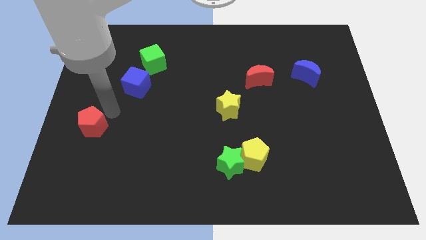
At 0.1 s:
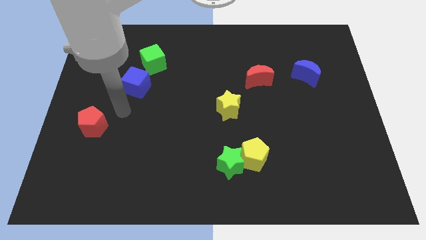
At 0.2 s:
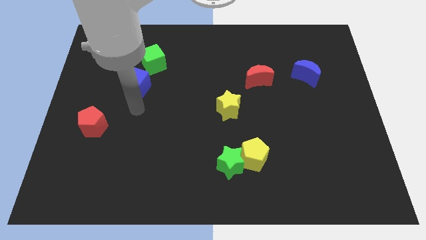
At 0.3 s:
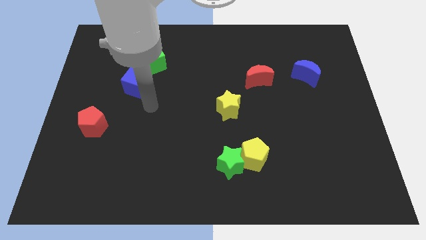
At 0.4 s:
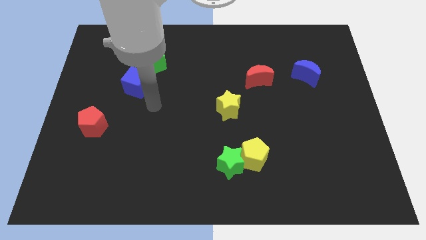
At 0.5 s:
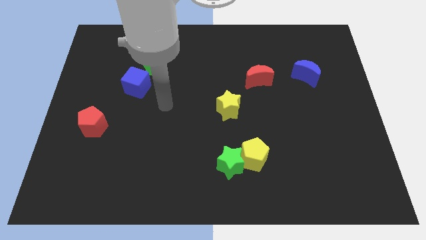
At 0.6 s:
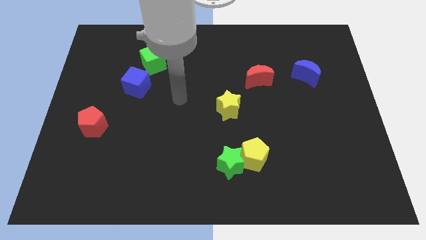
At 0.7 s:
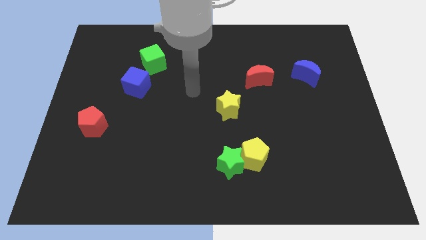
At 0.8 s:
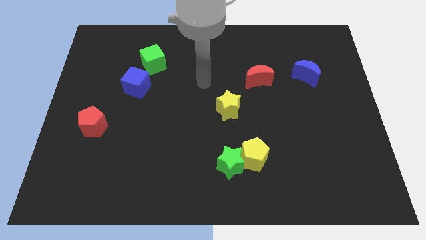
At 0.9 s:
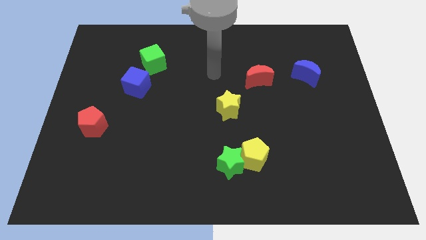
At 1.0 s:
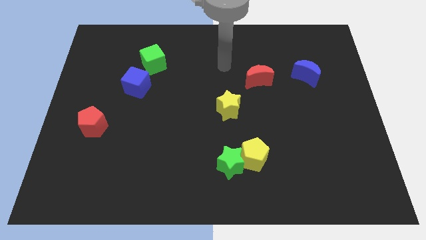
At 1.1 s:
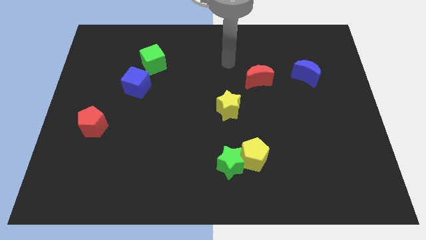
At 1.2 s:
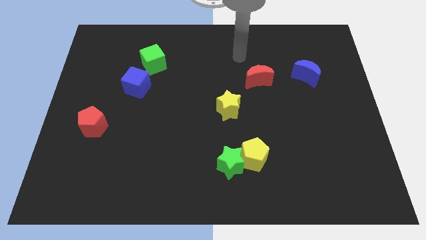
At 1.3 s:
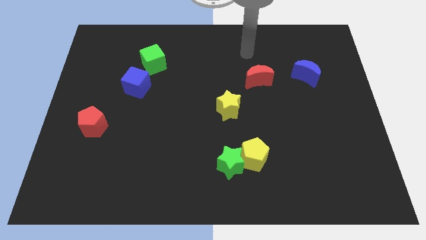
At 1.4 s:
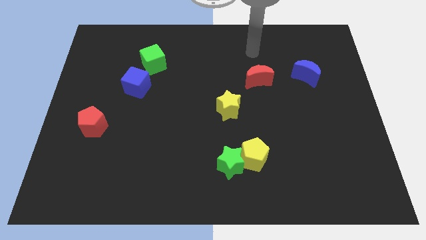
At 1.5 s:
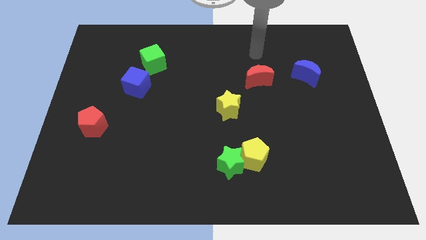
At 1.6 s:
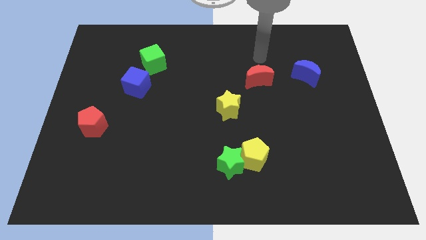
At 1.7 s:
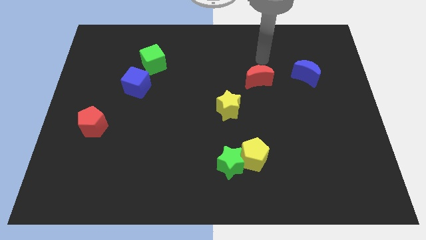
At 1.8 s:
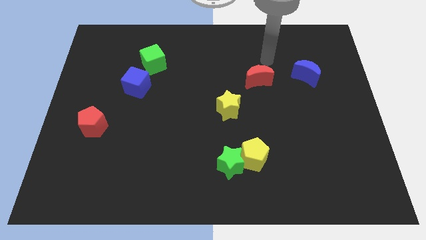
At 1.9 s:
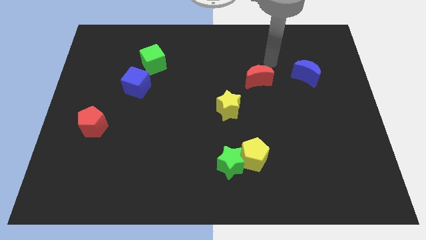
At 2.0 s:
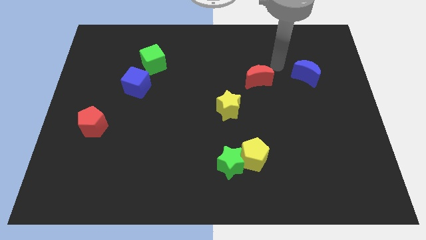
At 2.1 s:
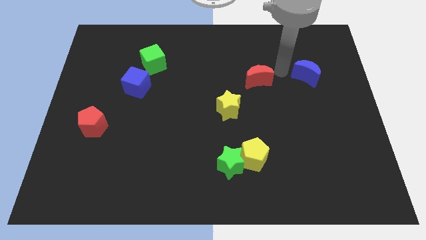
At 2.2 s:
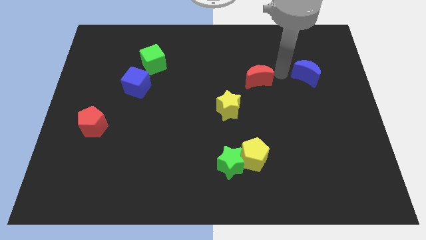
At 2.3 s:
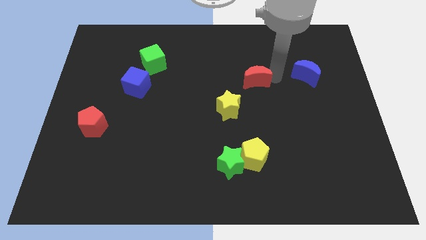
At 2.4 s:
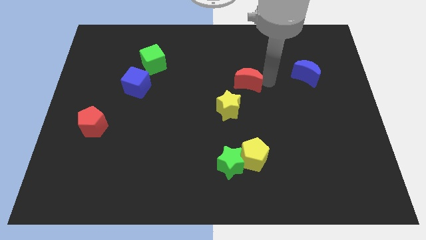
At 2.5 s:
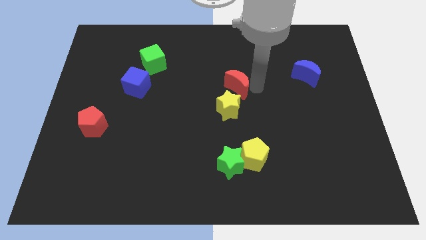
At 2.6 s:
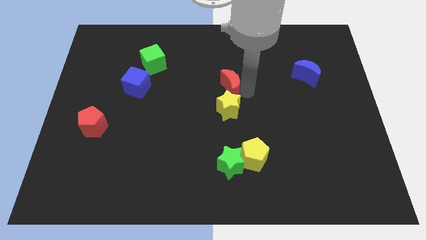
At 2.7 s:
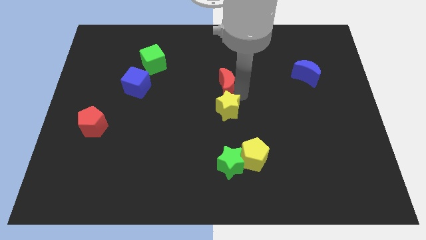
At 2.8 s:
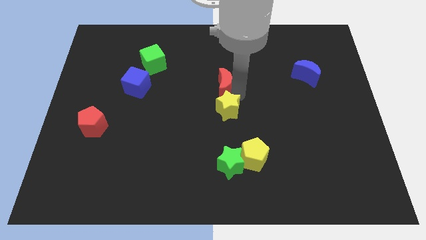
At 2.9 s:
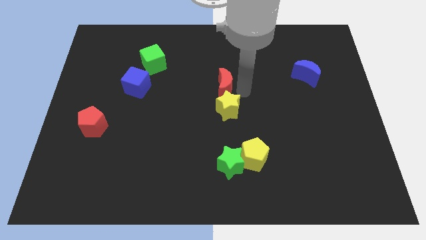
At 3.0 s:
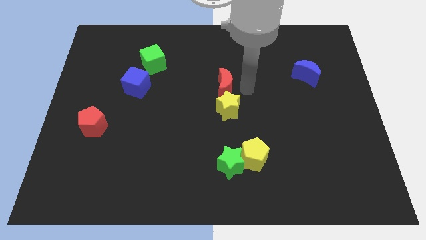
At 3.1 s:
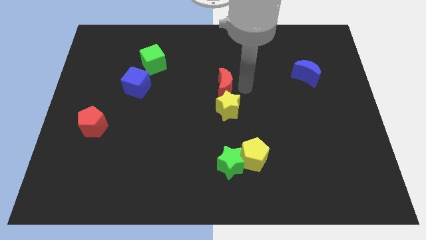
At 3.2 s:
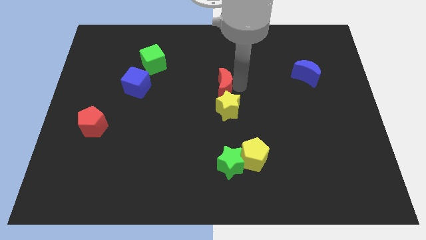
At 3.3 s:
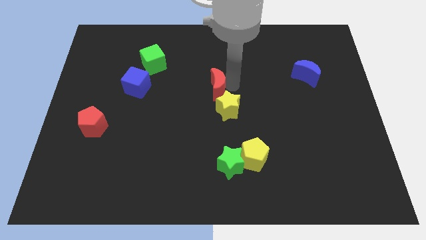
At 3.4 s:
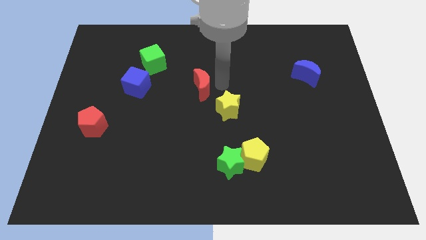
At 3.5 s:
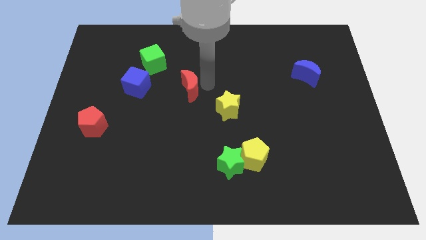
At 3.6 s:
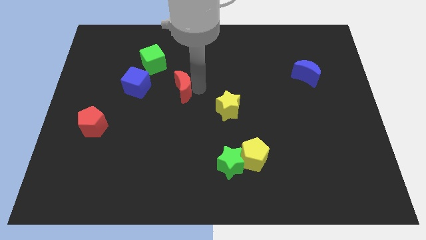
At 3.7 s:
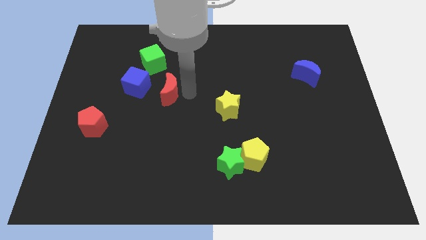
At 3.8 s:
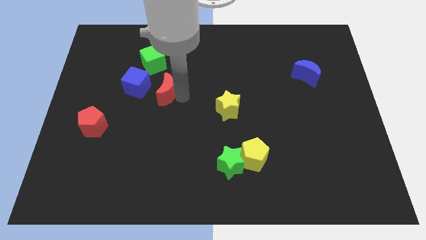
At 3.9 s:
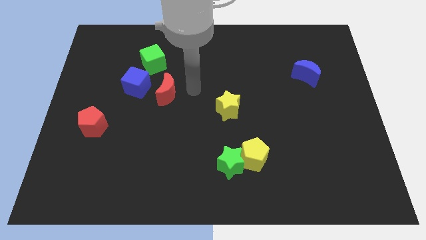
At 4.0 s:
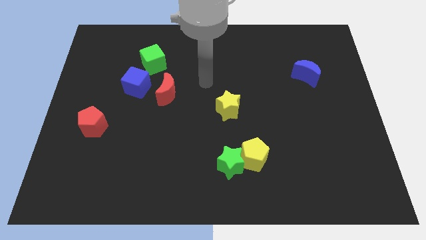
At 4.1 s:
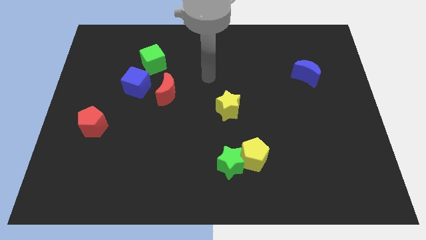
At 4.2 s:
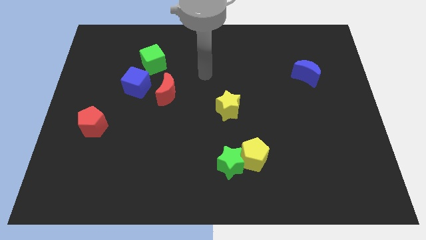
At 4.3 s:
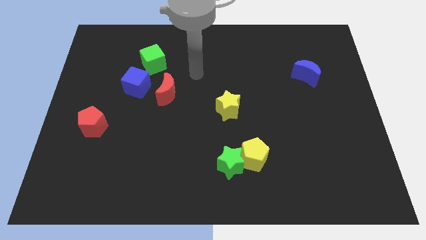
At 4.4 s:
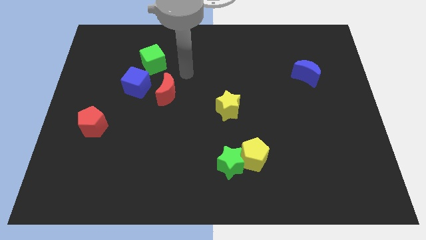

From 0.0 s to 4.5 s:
push the red crescent towards the right of the blue cube

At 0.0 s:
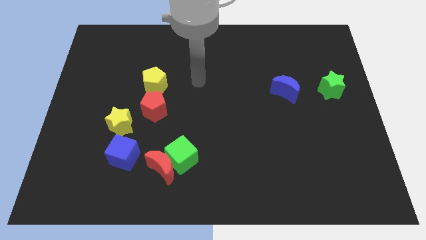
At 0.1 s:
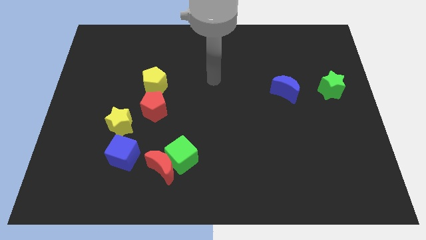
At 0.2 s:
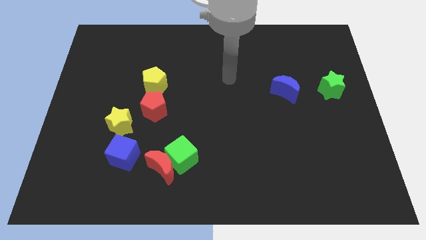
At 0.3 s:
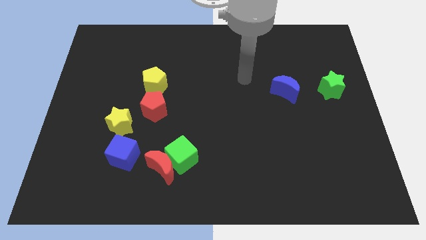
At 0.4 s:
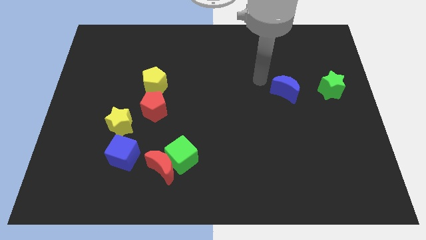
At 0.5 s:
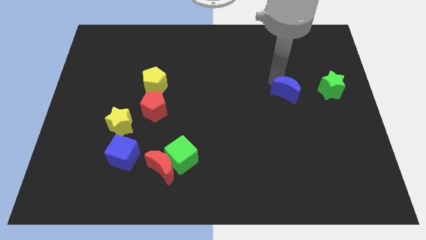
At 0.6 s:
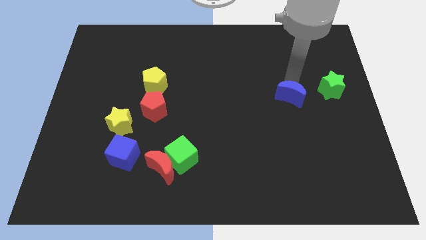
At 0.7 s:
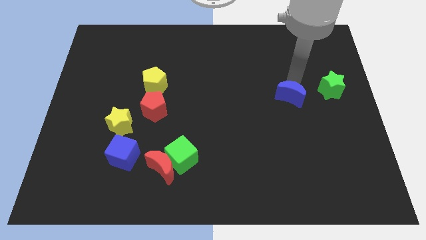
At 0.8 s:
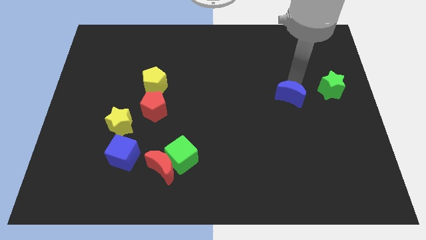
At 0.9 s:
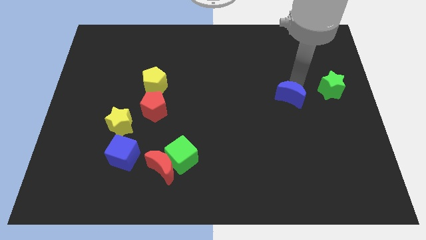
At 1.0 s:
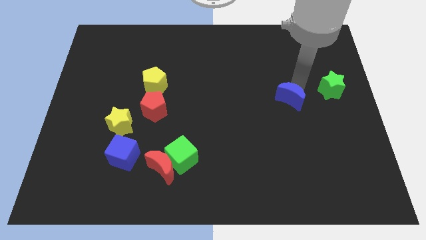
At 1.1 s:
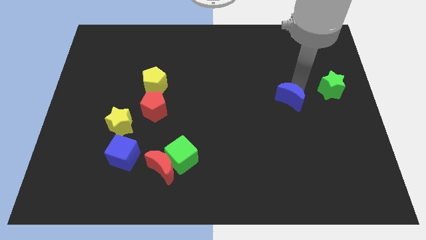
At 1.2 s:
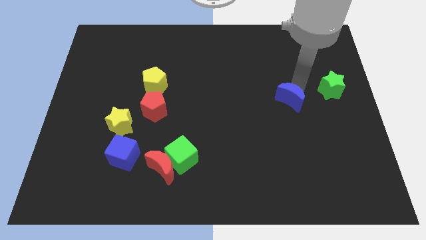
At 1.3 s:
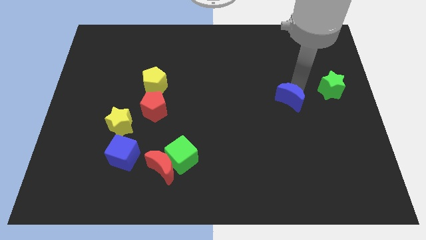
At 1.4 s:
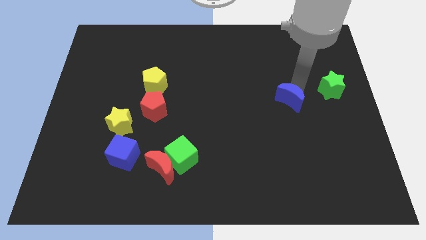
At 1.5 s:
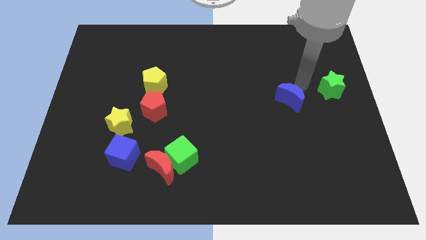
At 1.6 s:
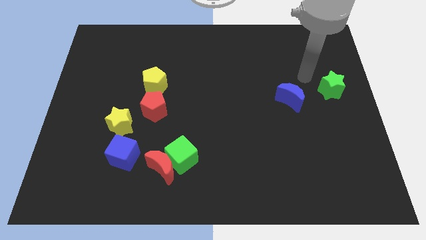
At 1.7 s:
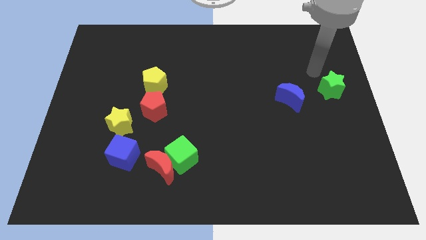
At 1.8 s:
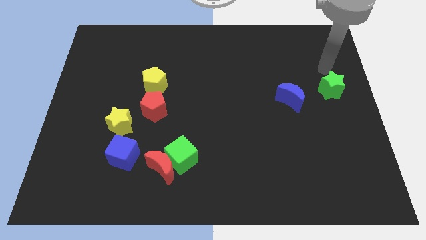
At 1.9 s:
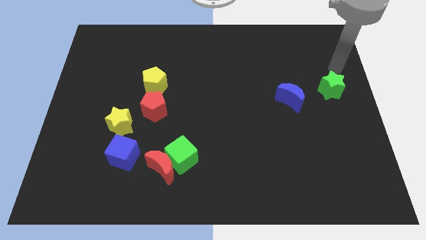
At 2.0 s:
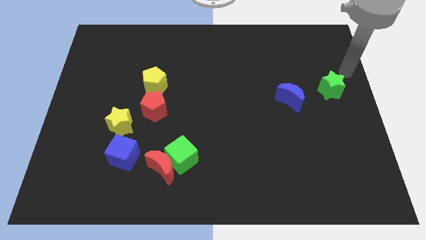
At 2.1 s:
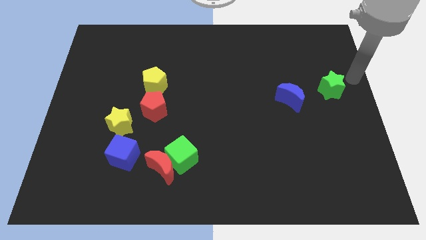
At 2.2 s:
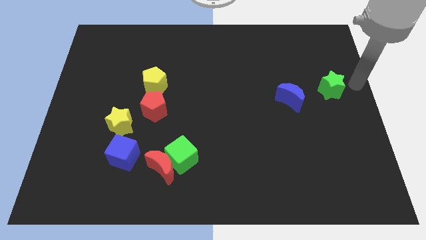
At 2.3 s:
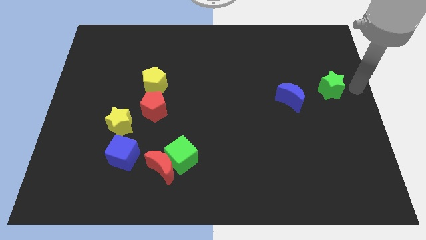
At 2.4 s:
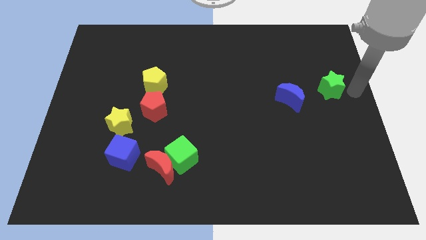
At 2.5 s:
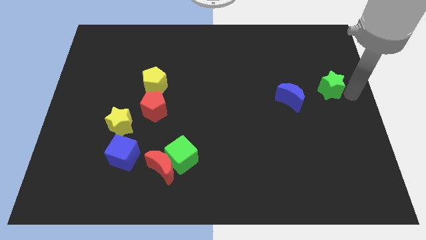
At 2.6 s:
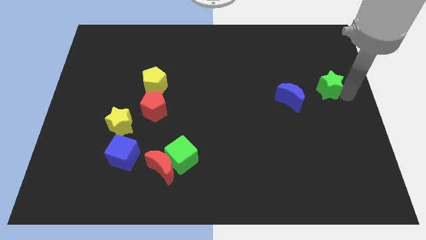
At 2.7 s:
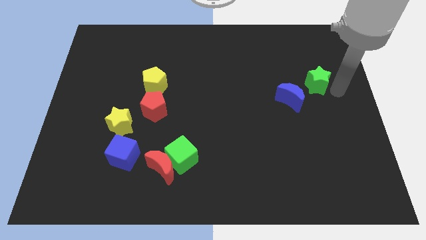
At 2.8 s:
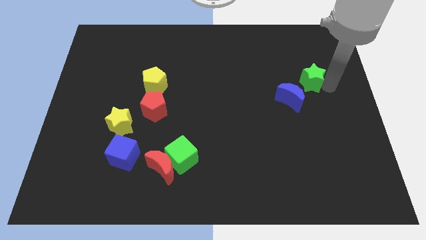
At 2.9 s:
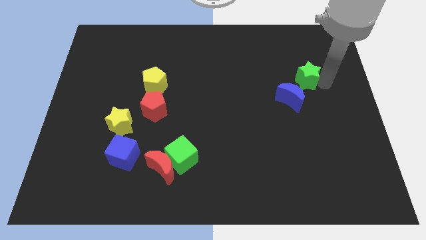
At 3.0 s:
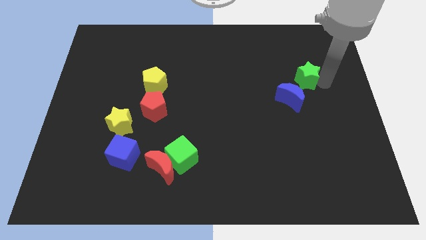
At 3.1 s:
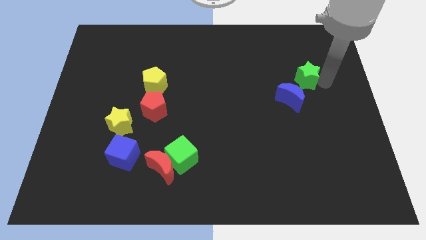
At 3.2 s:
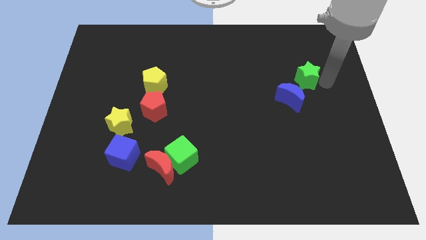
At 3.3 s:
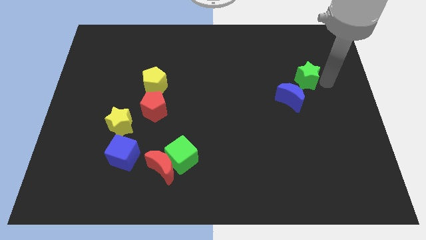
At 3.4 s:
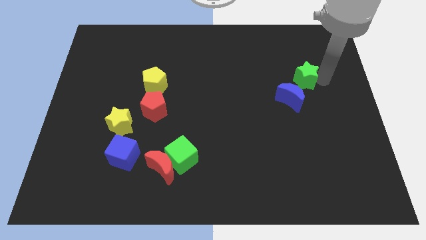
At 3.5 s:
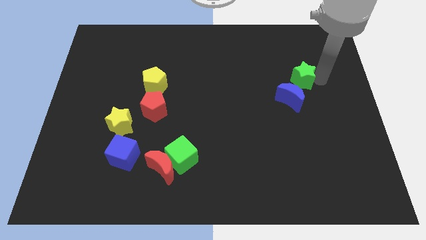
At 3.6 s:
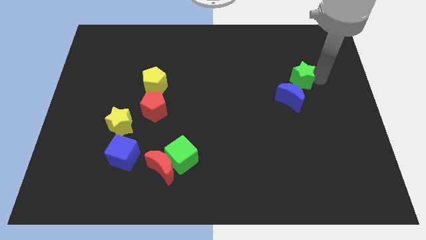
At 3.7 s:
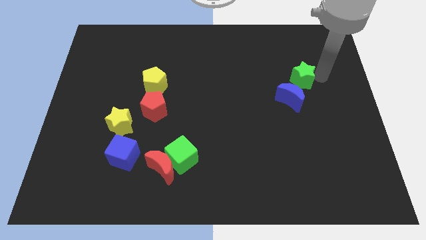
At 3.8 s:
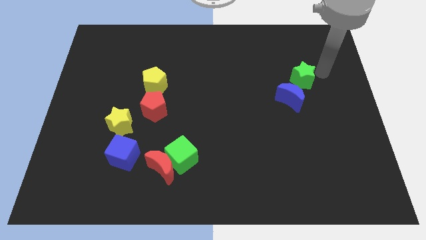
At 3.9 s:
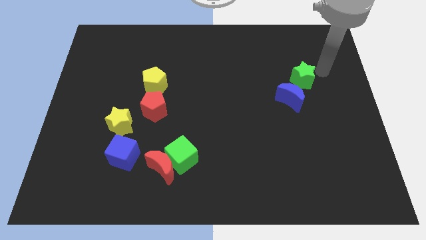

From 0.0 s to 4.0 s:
place the blue crescent and green star in a diagonal line

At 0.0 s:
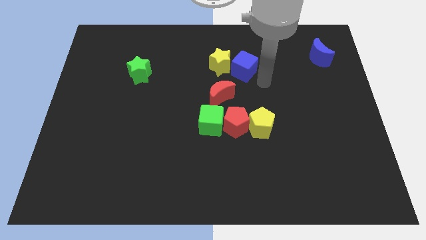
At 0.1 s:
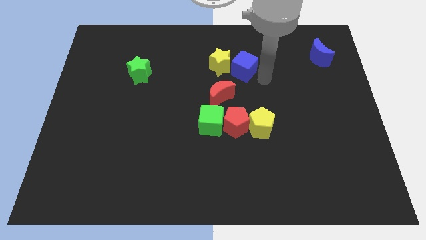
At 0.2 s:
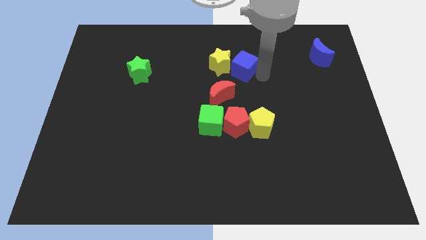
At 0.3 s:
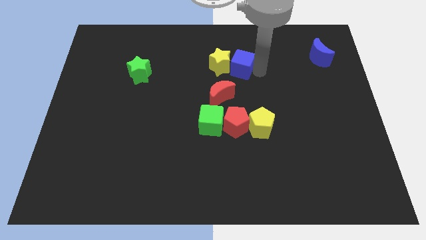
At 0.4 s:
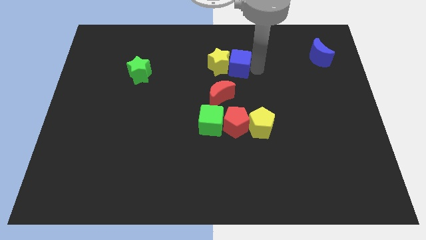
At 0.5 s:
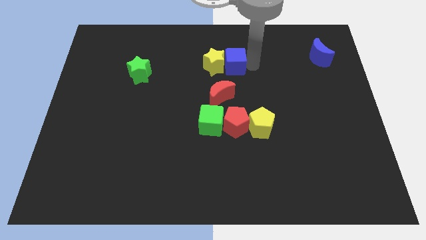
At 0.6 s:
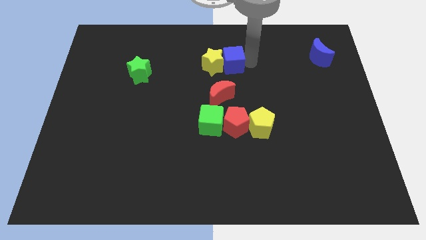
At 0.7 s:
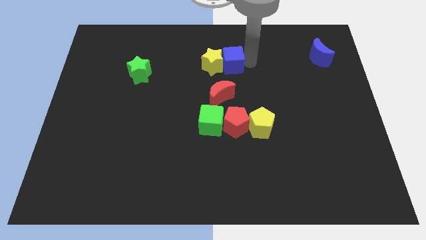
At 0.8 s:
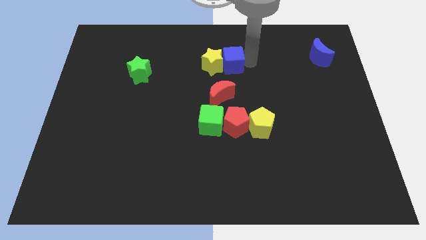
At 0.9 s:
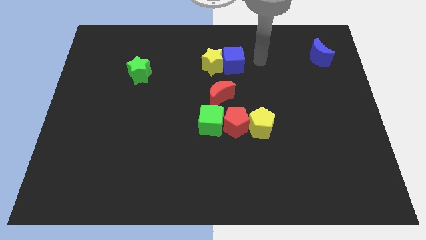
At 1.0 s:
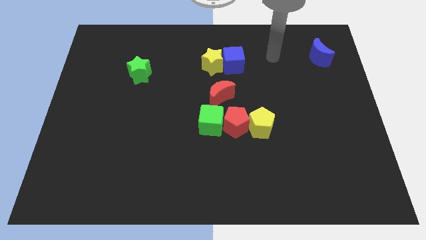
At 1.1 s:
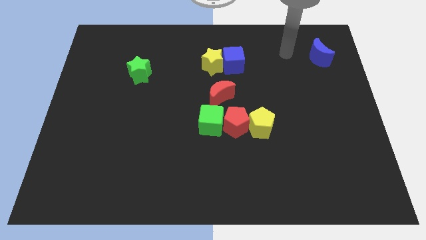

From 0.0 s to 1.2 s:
move the arm to the blue crescent
